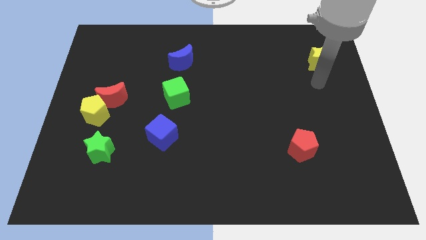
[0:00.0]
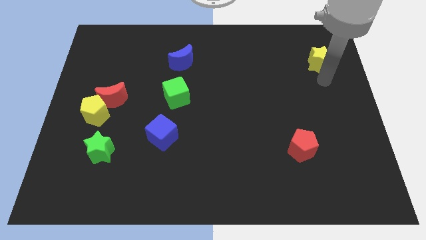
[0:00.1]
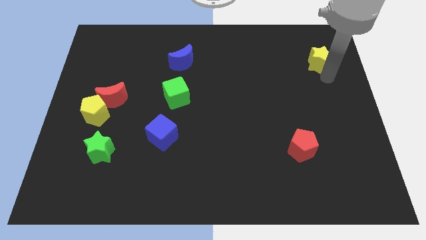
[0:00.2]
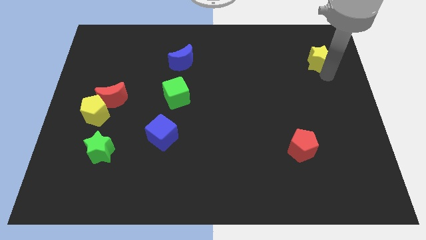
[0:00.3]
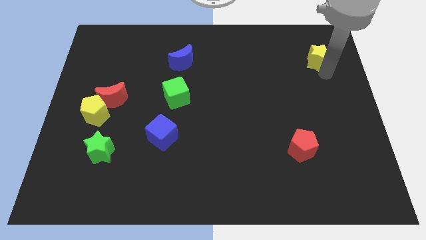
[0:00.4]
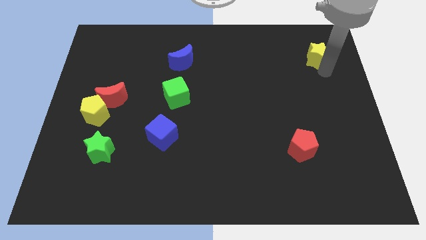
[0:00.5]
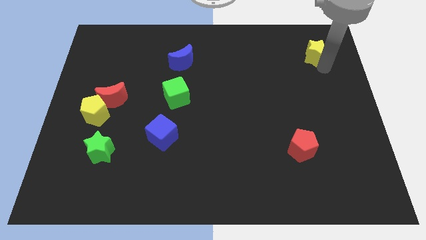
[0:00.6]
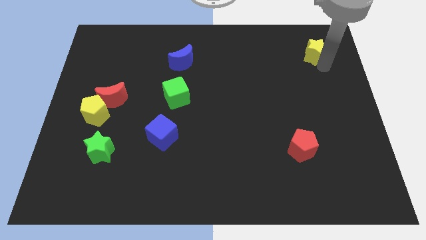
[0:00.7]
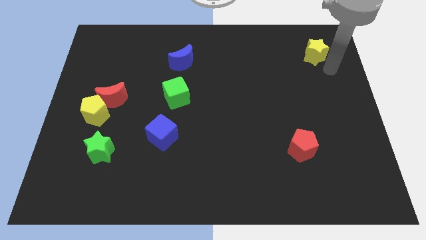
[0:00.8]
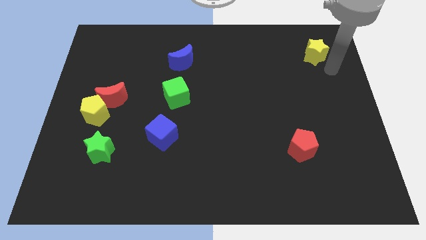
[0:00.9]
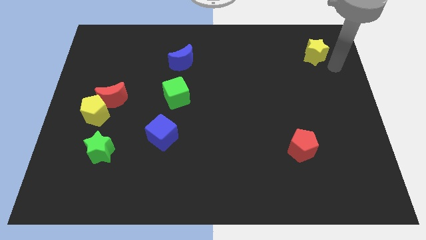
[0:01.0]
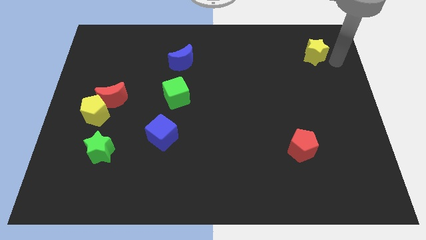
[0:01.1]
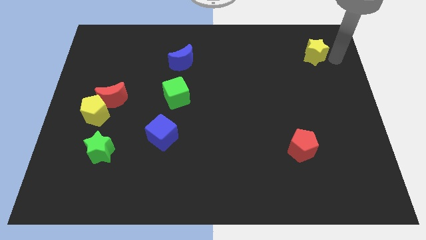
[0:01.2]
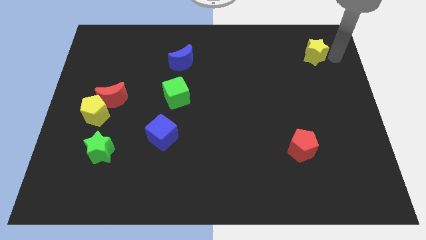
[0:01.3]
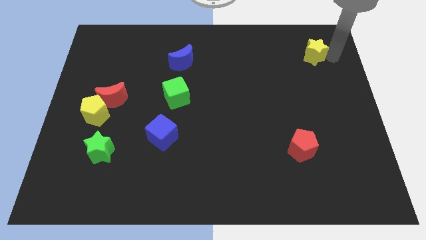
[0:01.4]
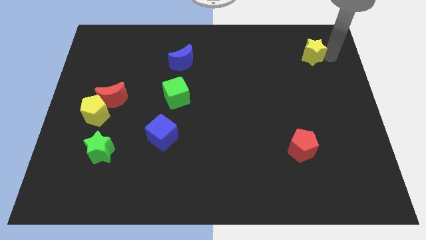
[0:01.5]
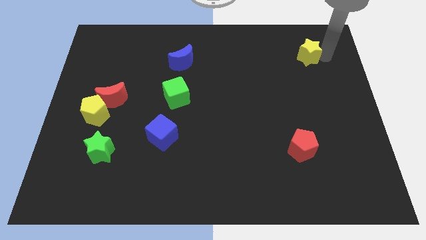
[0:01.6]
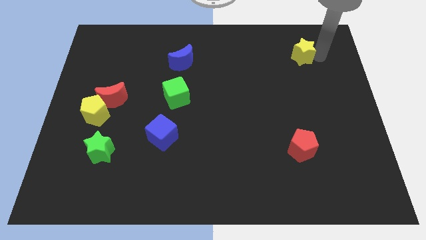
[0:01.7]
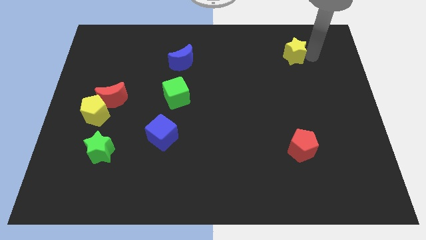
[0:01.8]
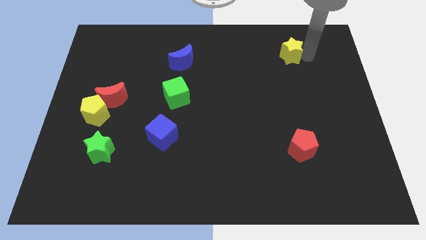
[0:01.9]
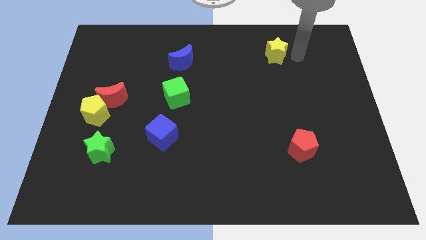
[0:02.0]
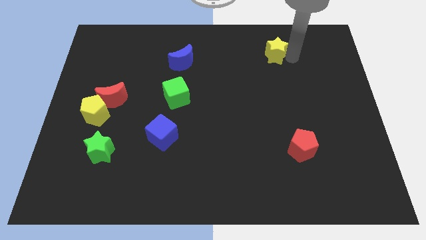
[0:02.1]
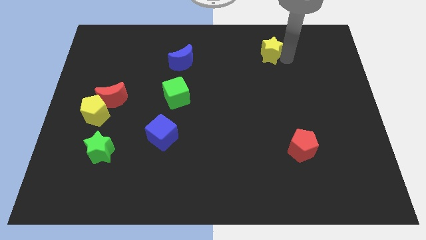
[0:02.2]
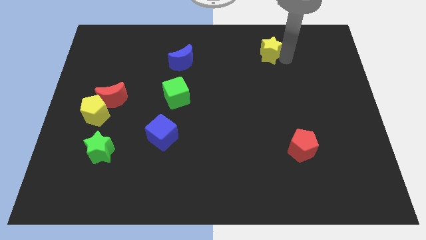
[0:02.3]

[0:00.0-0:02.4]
place the yellow star right to the blue moon

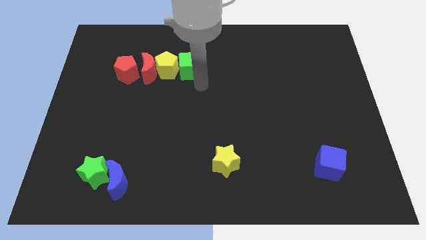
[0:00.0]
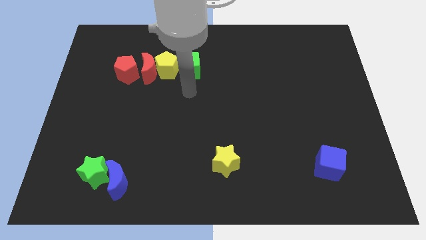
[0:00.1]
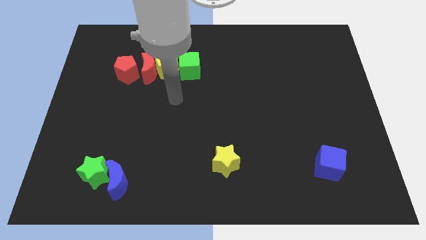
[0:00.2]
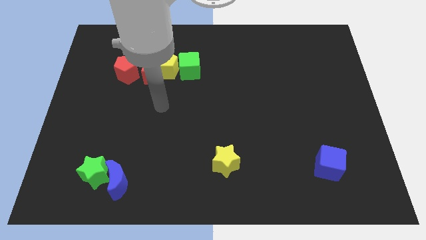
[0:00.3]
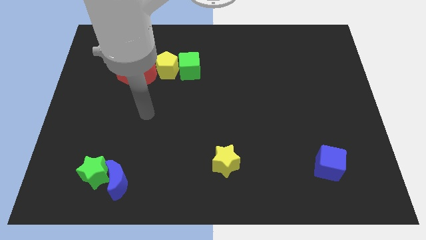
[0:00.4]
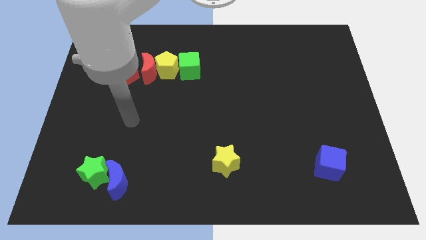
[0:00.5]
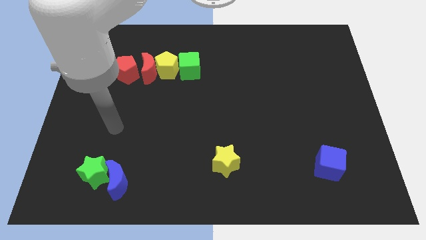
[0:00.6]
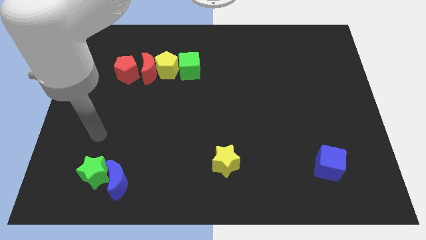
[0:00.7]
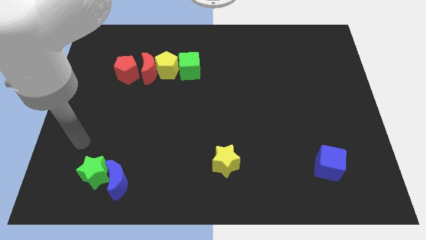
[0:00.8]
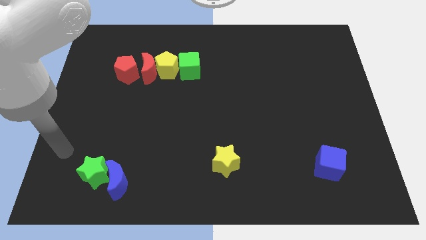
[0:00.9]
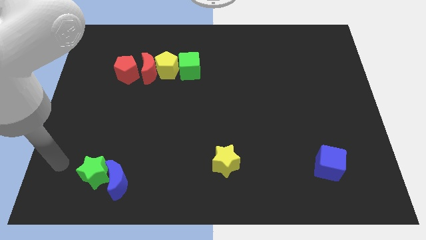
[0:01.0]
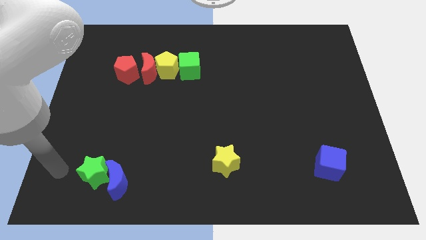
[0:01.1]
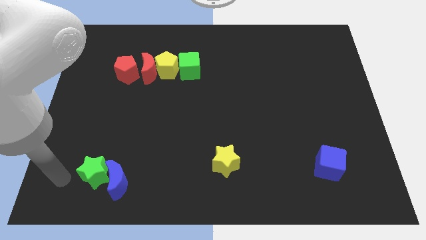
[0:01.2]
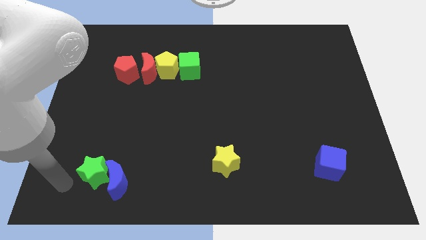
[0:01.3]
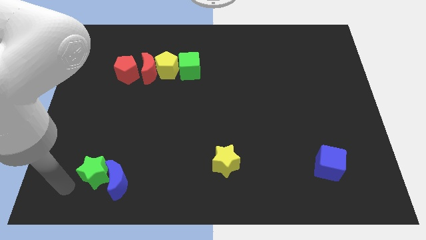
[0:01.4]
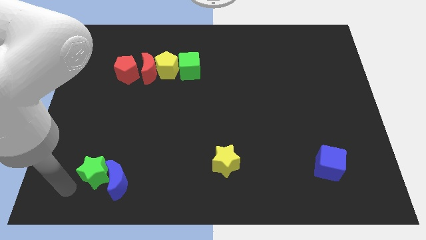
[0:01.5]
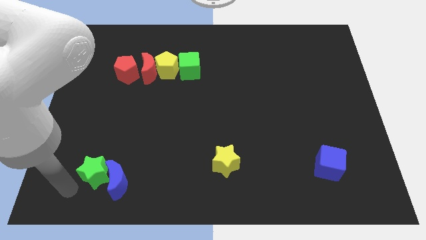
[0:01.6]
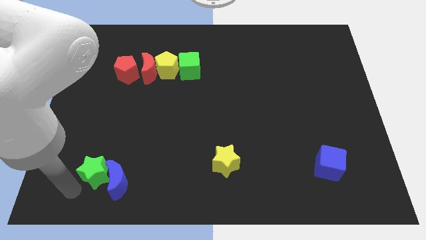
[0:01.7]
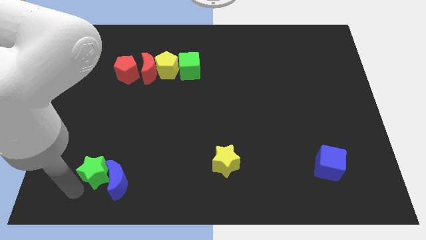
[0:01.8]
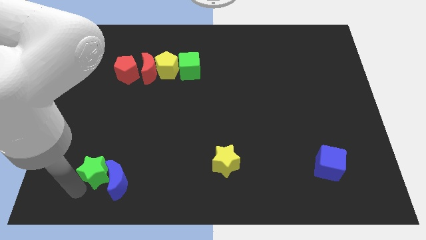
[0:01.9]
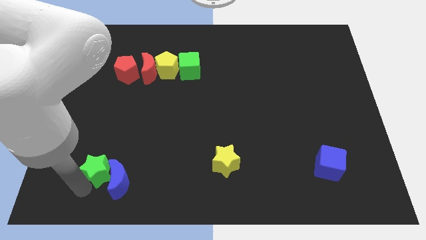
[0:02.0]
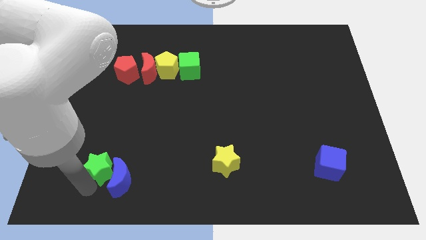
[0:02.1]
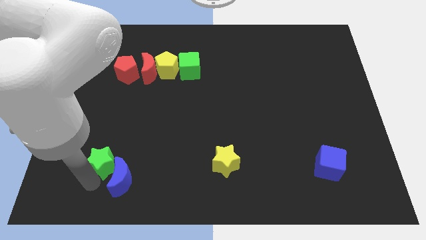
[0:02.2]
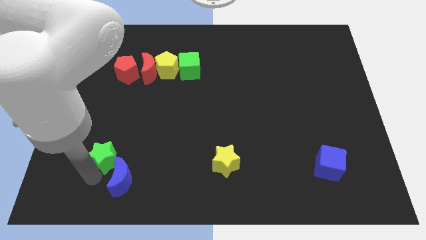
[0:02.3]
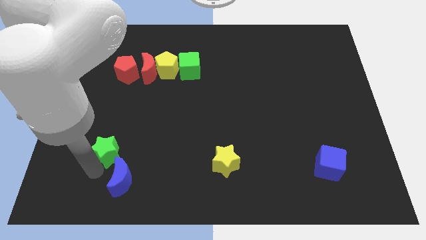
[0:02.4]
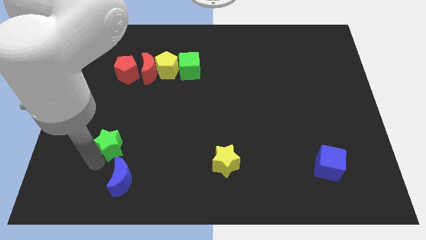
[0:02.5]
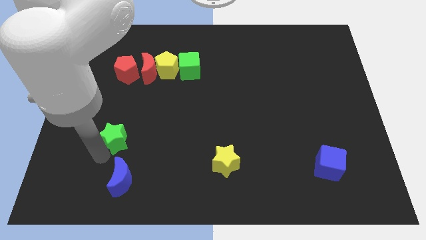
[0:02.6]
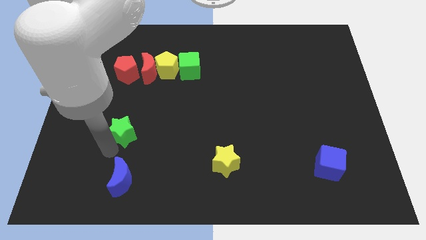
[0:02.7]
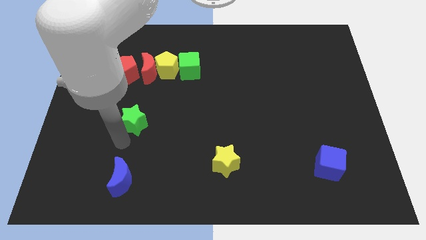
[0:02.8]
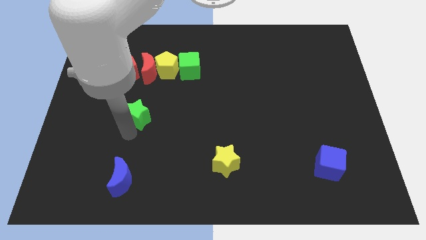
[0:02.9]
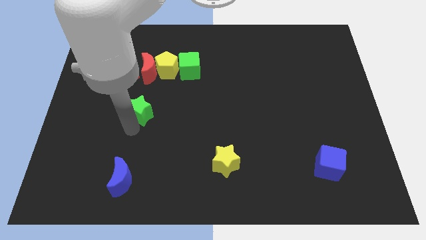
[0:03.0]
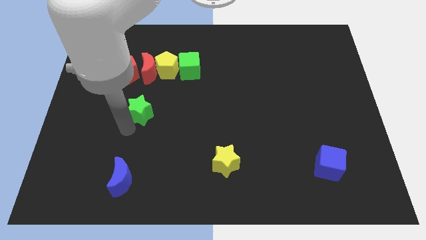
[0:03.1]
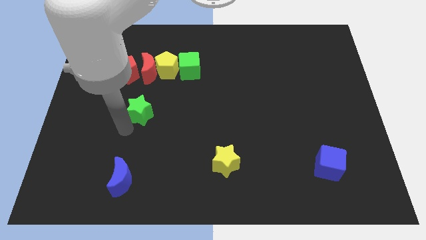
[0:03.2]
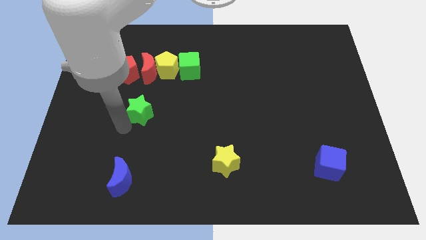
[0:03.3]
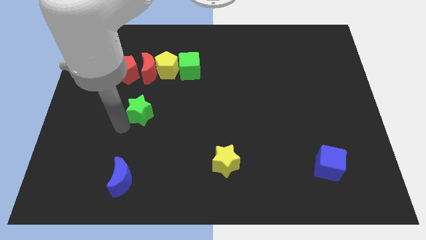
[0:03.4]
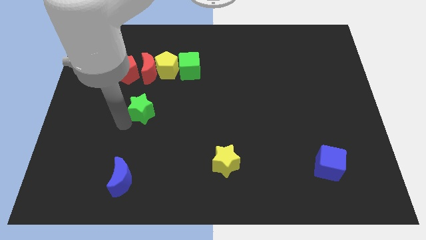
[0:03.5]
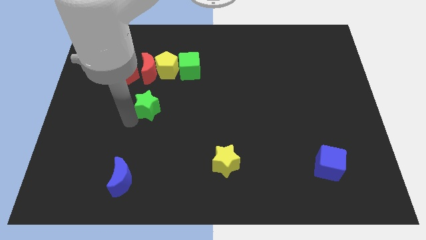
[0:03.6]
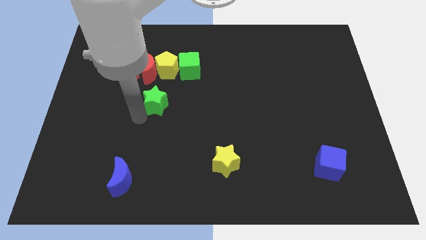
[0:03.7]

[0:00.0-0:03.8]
separate the green star from the blue moon

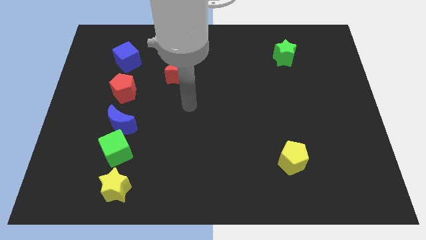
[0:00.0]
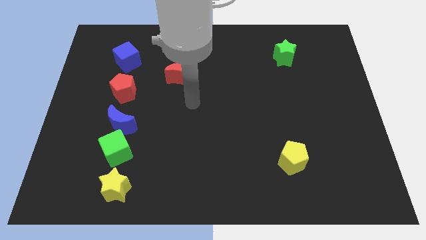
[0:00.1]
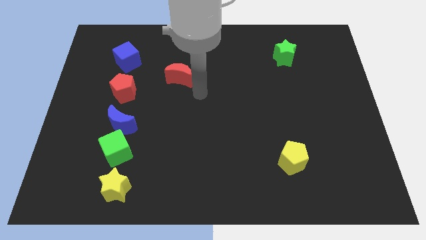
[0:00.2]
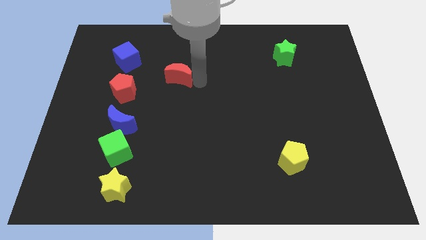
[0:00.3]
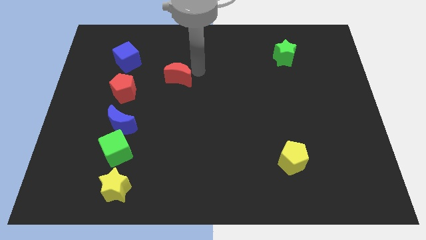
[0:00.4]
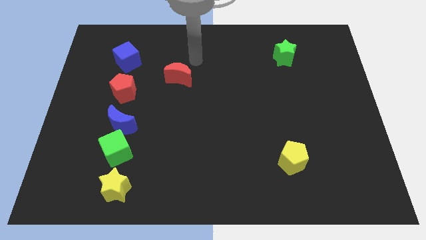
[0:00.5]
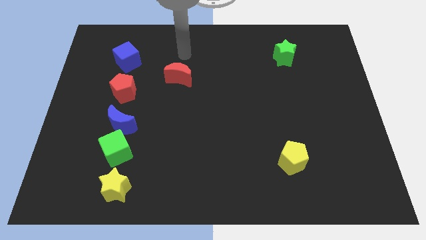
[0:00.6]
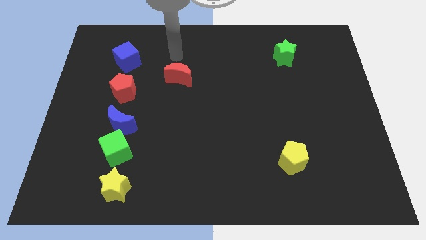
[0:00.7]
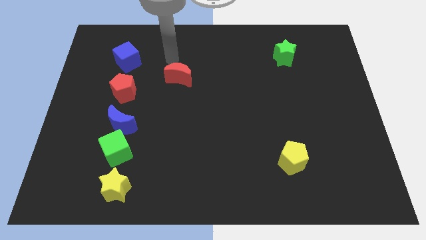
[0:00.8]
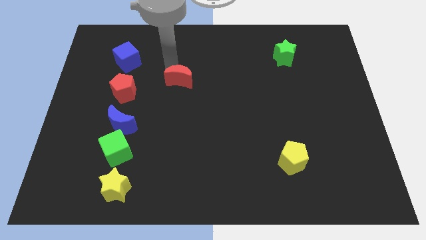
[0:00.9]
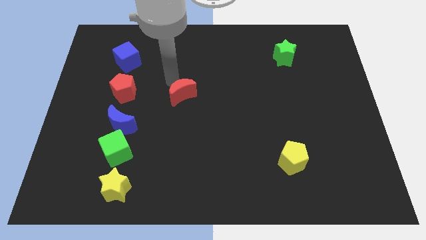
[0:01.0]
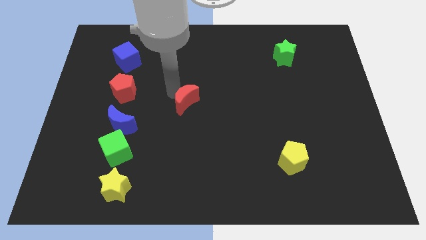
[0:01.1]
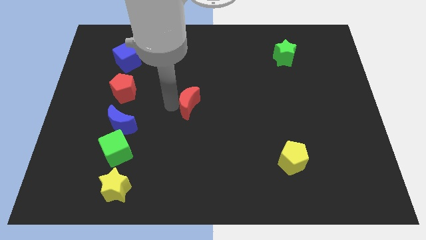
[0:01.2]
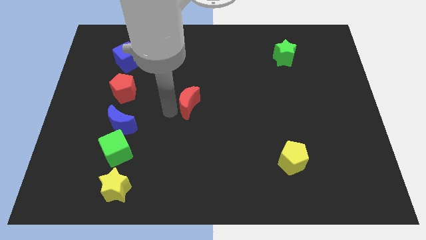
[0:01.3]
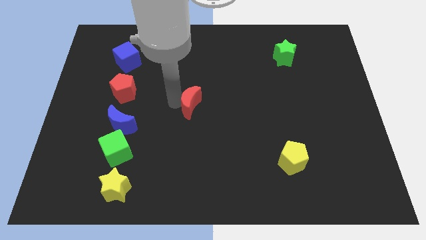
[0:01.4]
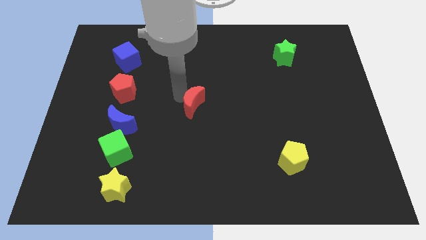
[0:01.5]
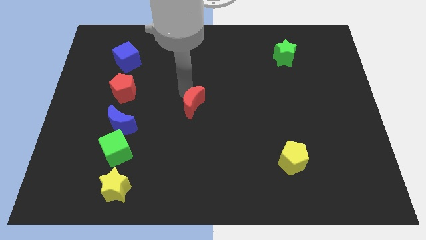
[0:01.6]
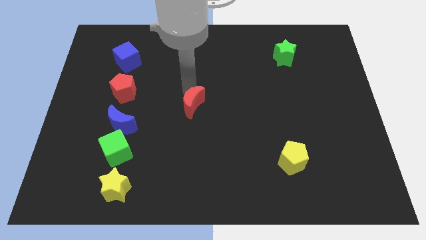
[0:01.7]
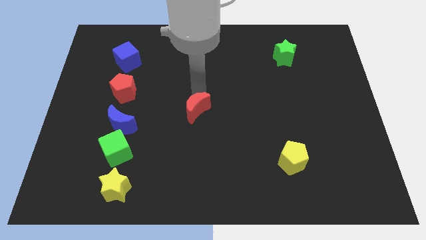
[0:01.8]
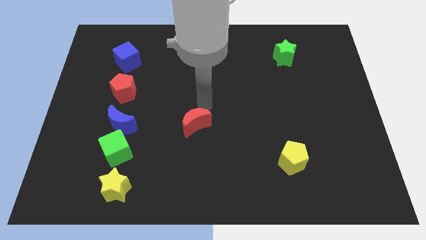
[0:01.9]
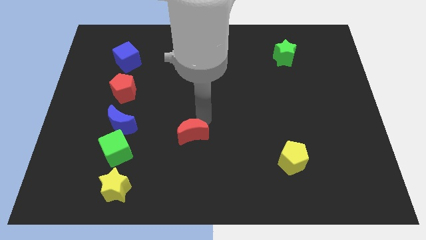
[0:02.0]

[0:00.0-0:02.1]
slide red crescent downwards

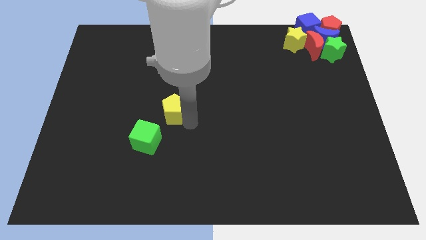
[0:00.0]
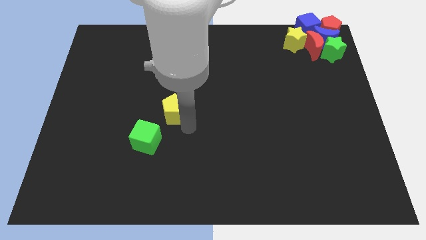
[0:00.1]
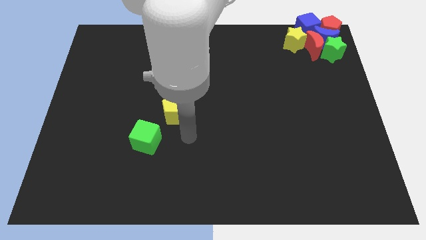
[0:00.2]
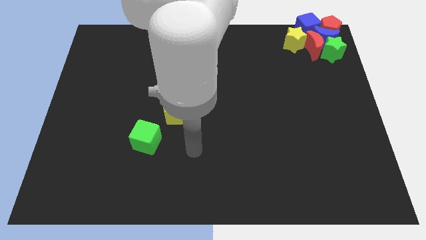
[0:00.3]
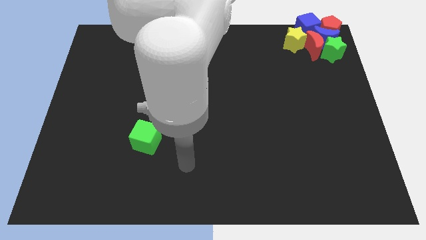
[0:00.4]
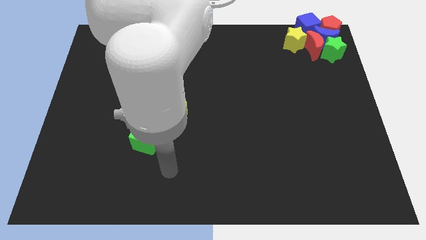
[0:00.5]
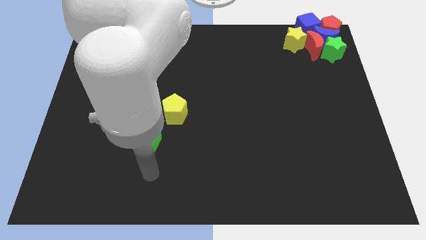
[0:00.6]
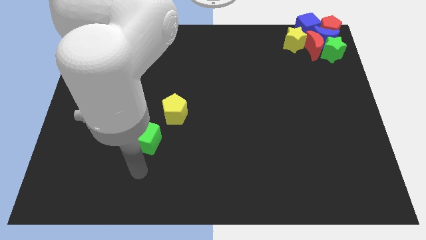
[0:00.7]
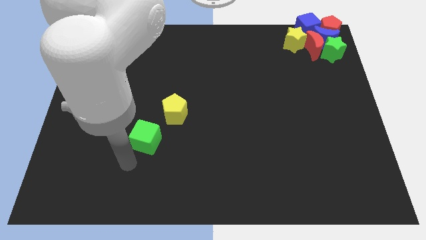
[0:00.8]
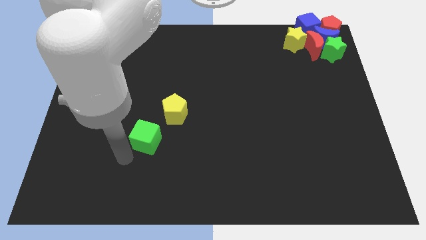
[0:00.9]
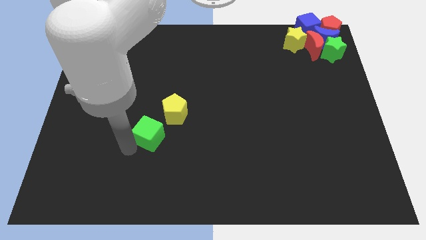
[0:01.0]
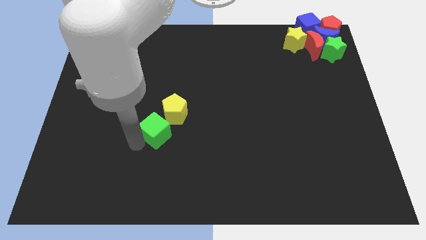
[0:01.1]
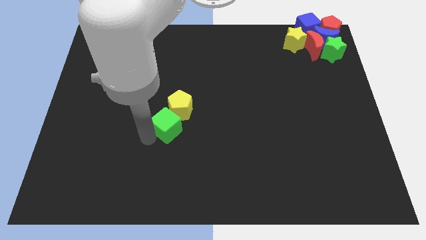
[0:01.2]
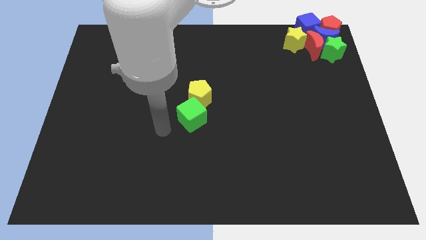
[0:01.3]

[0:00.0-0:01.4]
push the green cube to the bottom of the yellow pentagon
